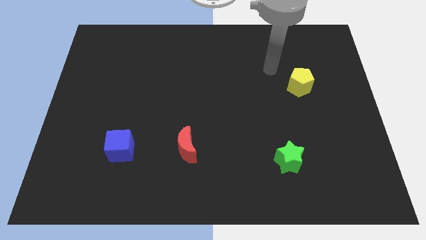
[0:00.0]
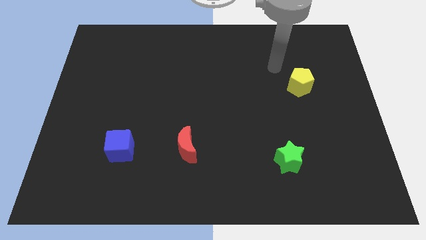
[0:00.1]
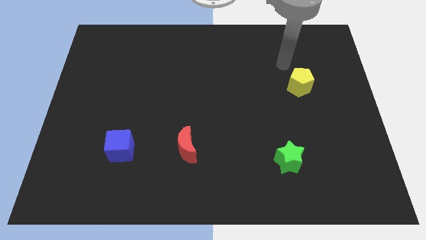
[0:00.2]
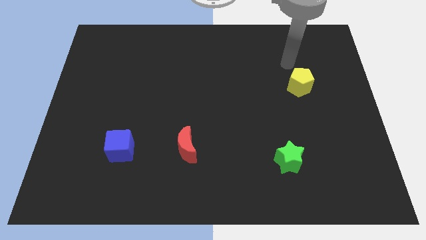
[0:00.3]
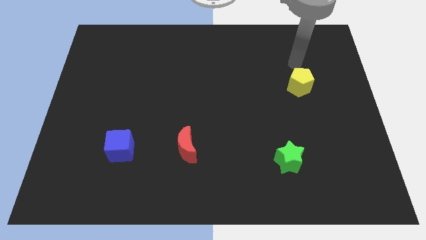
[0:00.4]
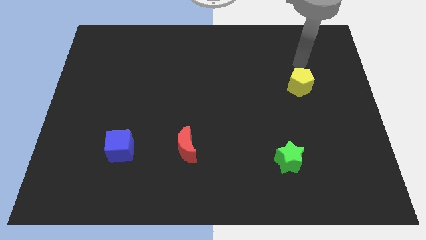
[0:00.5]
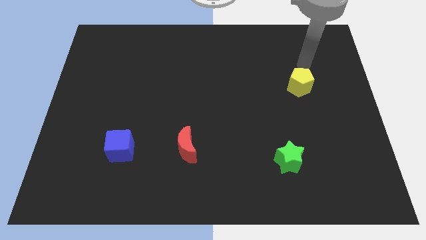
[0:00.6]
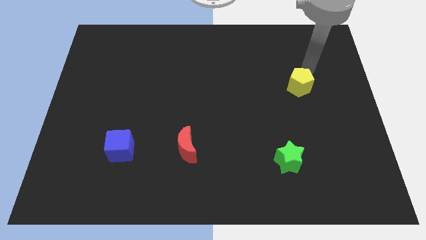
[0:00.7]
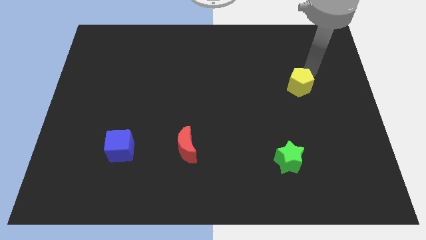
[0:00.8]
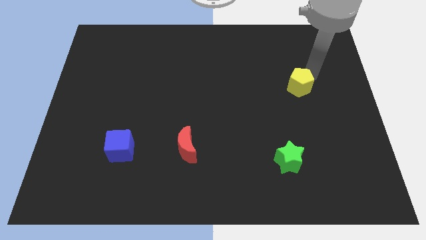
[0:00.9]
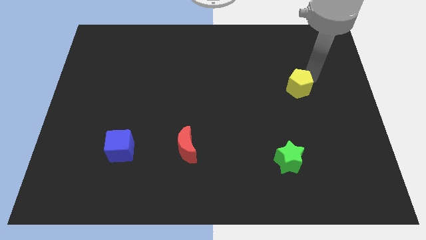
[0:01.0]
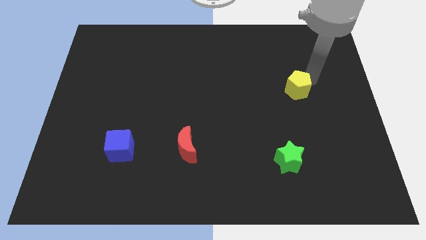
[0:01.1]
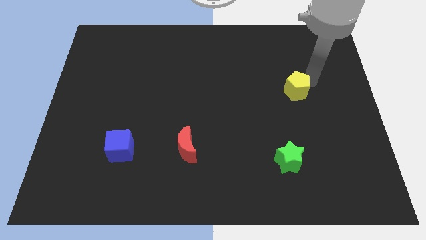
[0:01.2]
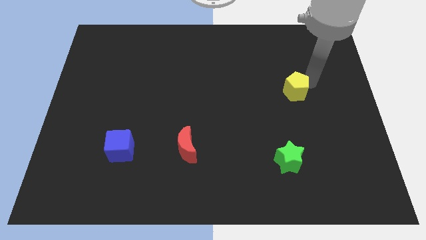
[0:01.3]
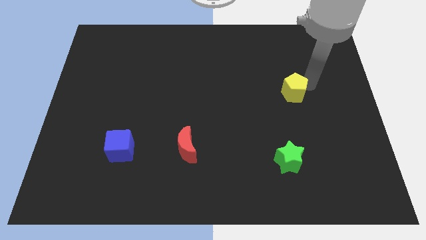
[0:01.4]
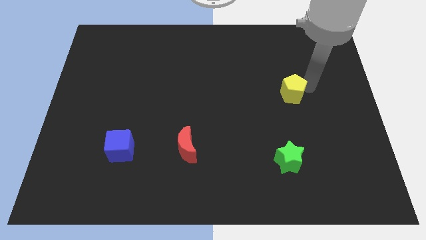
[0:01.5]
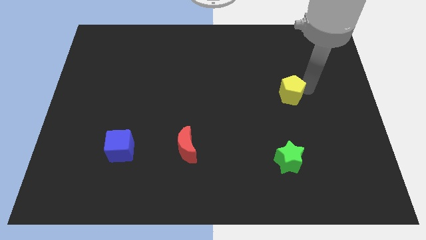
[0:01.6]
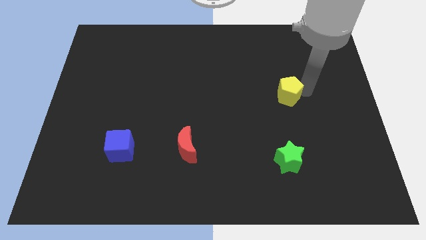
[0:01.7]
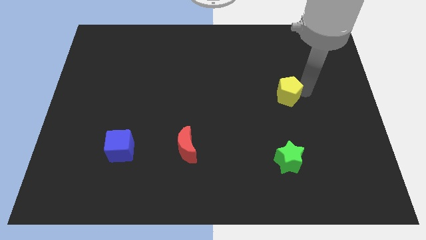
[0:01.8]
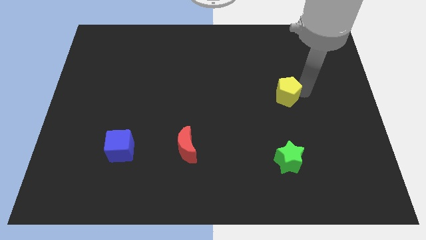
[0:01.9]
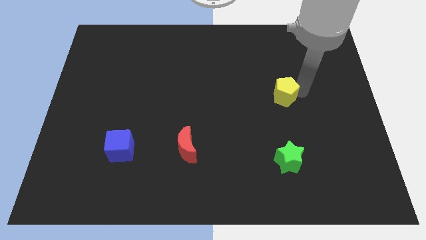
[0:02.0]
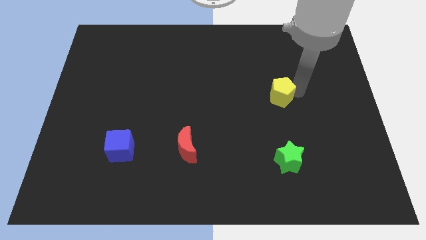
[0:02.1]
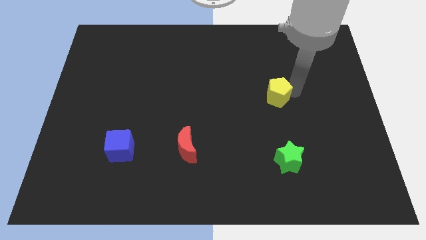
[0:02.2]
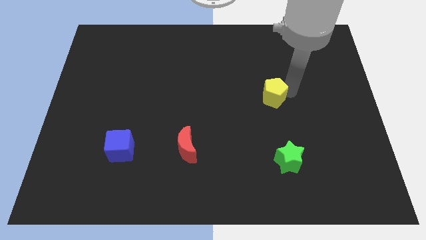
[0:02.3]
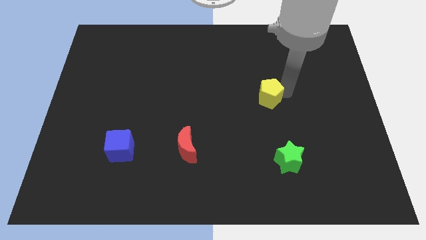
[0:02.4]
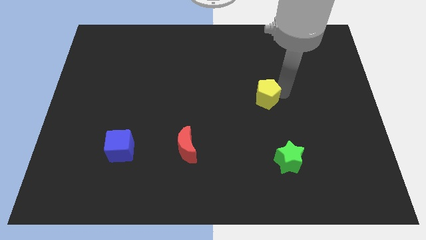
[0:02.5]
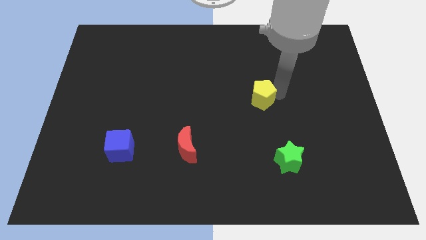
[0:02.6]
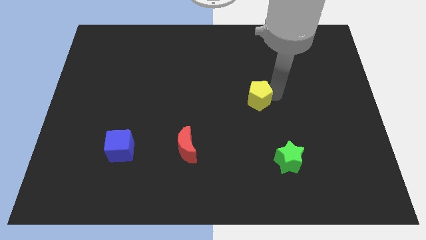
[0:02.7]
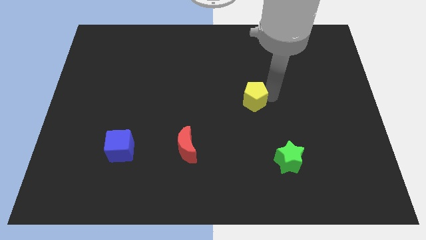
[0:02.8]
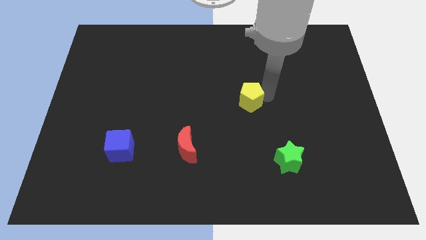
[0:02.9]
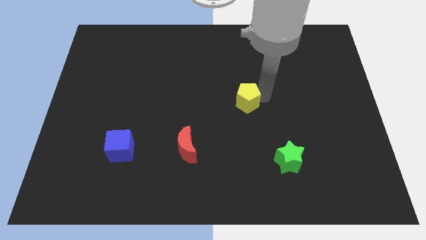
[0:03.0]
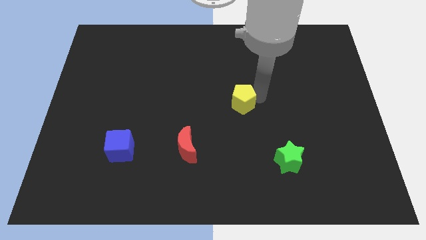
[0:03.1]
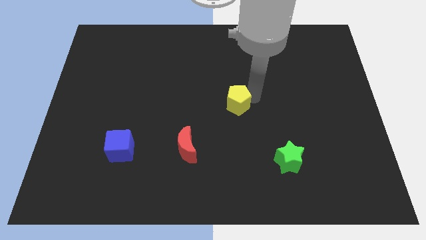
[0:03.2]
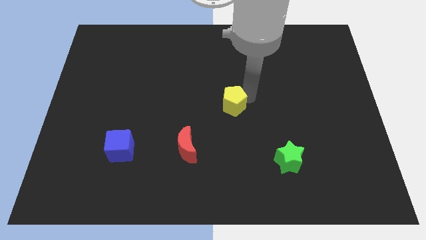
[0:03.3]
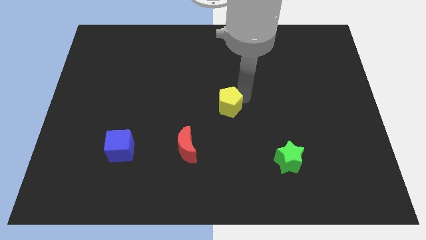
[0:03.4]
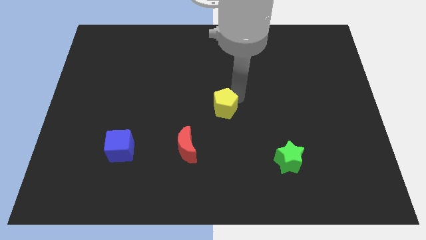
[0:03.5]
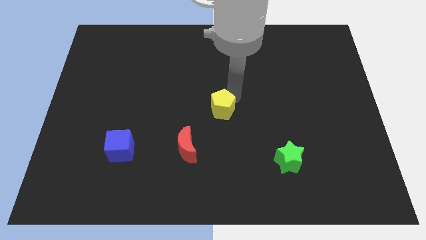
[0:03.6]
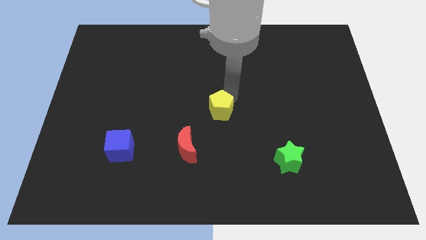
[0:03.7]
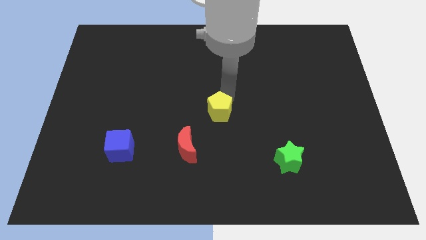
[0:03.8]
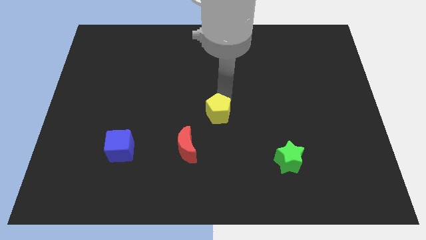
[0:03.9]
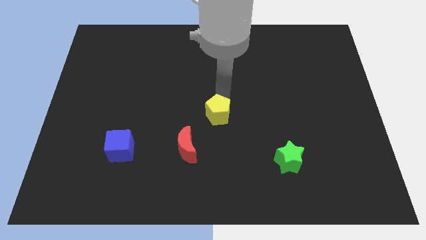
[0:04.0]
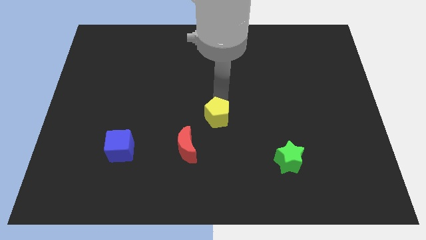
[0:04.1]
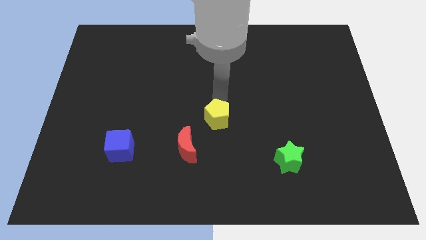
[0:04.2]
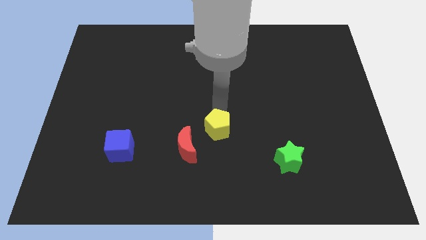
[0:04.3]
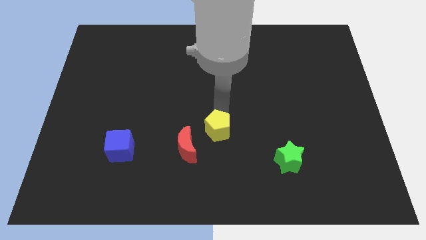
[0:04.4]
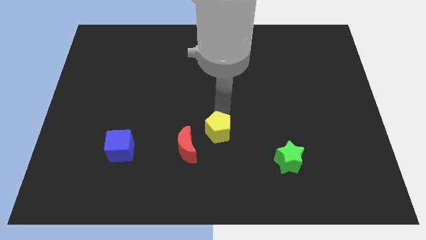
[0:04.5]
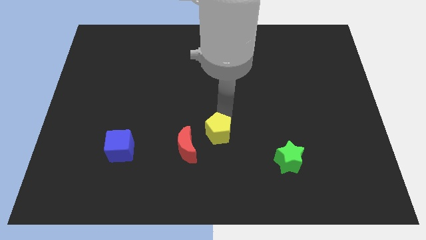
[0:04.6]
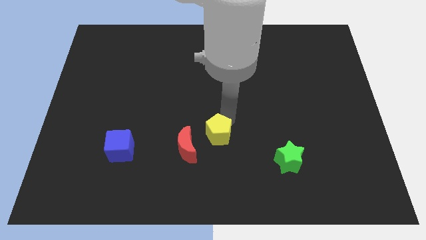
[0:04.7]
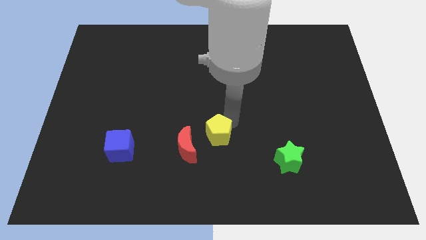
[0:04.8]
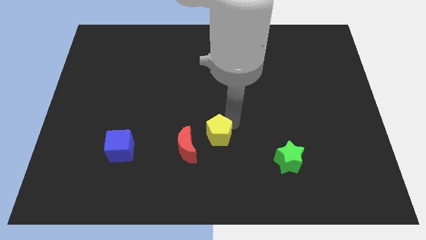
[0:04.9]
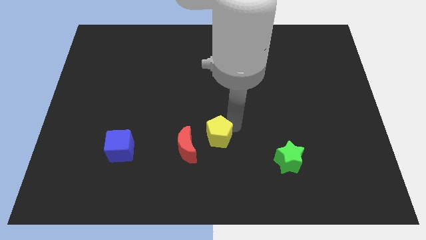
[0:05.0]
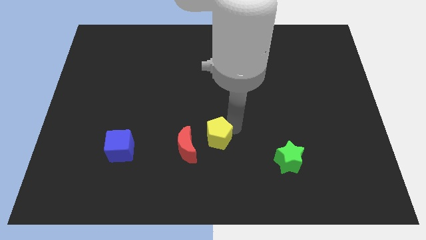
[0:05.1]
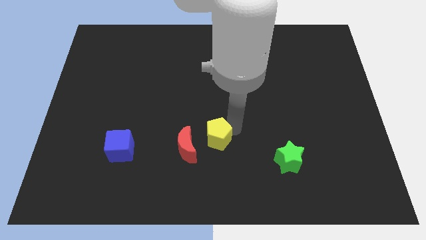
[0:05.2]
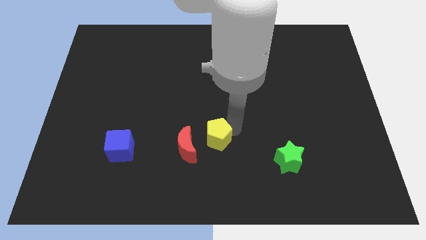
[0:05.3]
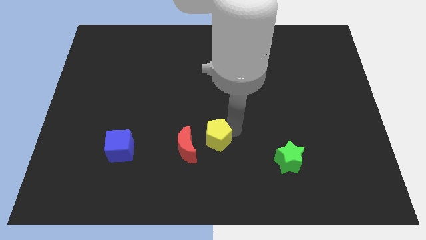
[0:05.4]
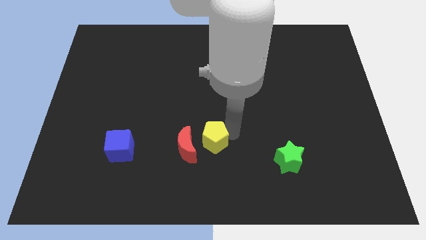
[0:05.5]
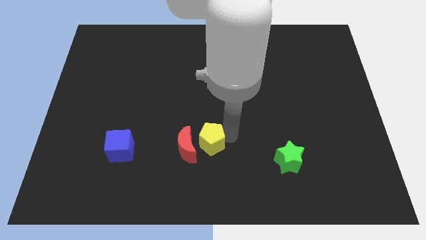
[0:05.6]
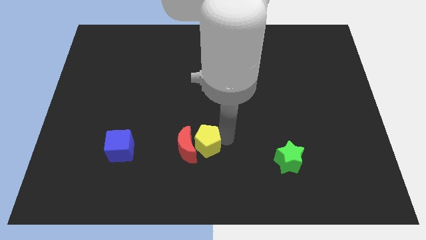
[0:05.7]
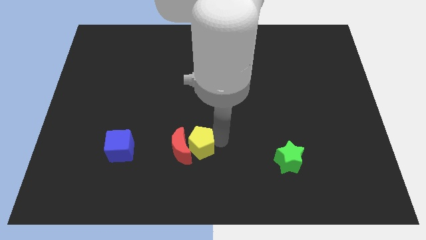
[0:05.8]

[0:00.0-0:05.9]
slide the yellow block close to the red moon

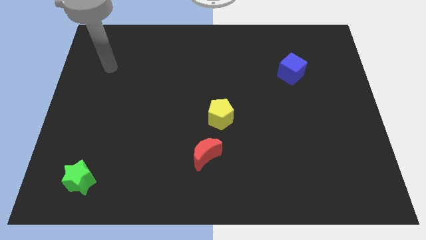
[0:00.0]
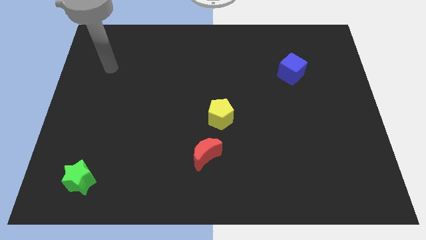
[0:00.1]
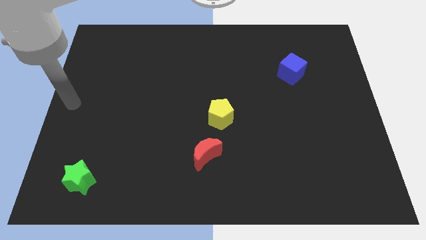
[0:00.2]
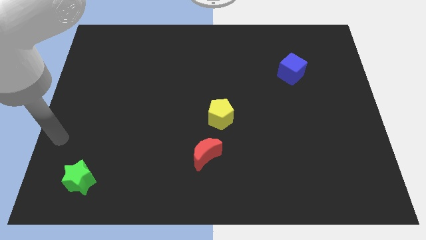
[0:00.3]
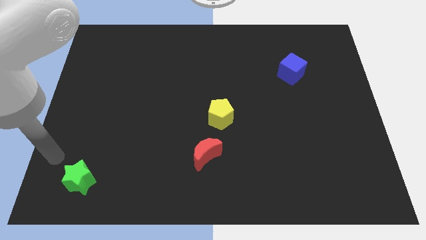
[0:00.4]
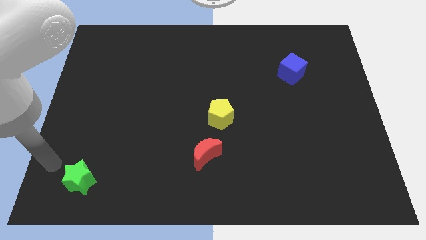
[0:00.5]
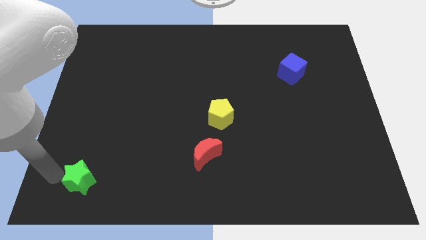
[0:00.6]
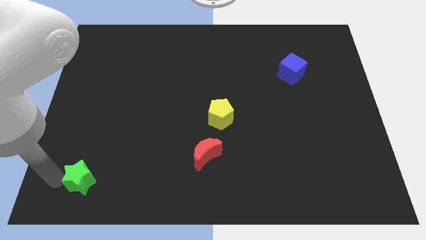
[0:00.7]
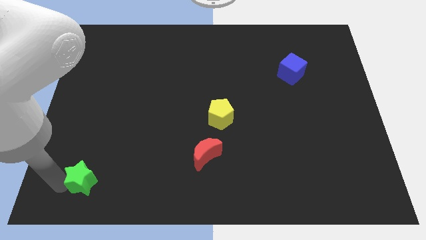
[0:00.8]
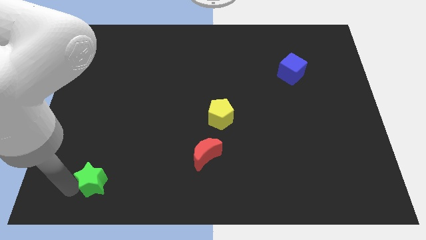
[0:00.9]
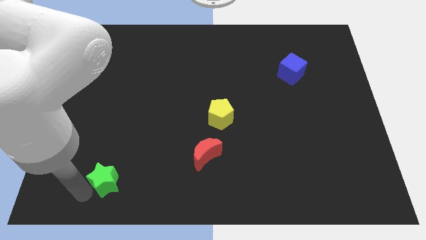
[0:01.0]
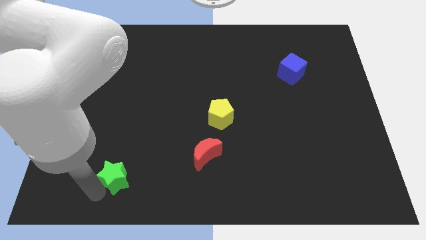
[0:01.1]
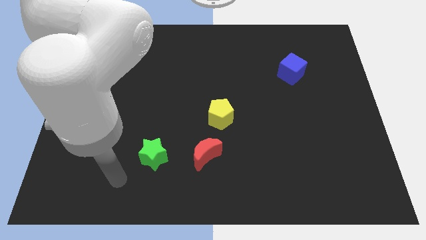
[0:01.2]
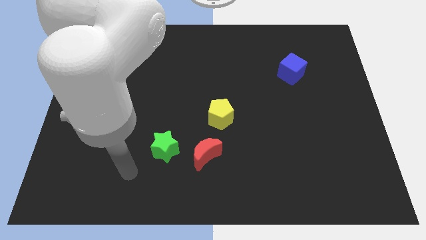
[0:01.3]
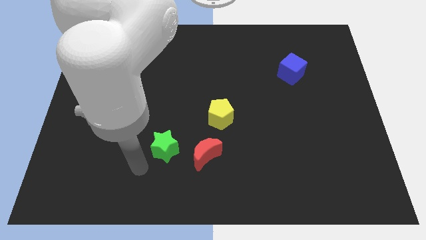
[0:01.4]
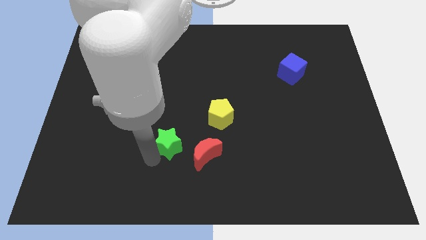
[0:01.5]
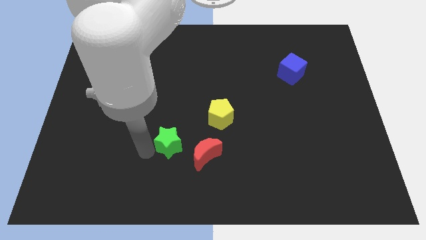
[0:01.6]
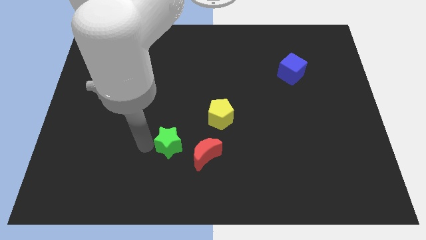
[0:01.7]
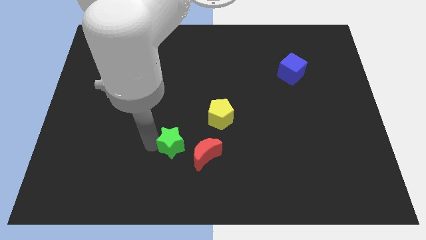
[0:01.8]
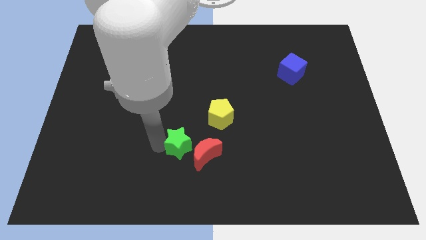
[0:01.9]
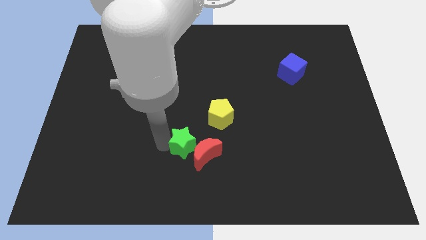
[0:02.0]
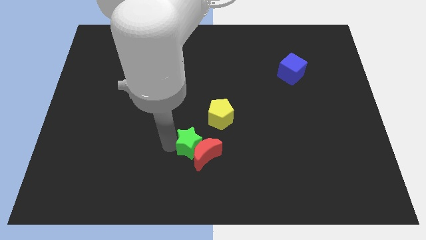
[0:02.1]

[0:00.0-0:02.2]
move the green block to the red moon

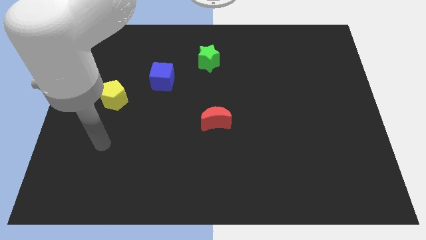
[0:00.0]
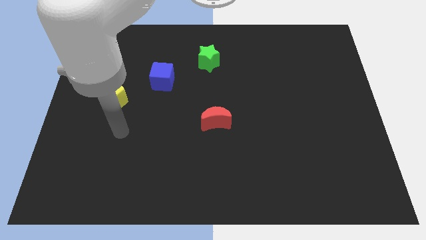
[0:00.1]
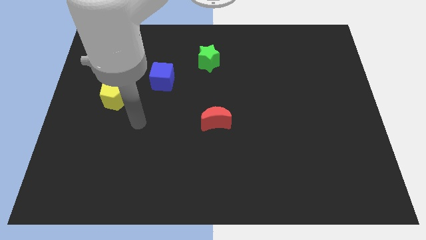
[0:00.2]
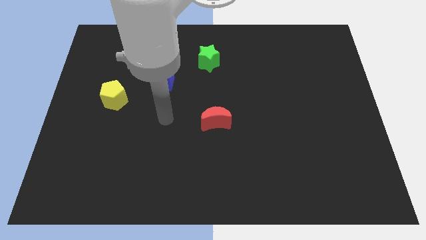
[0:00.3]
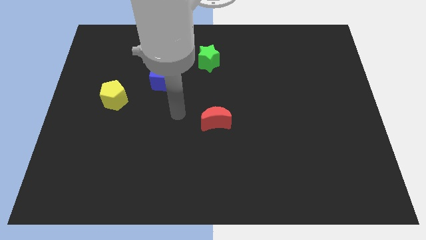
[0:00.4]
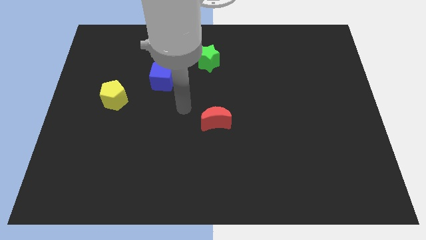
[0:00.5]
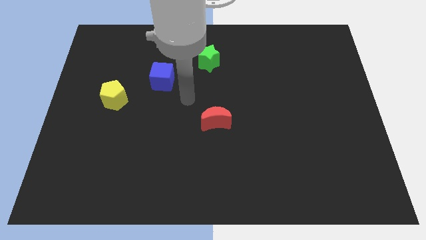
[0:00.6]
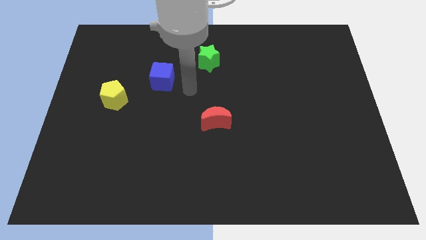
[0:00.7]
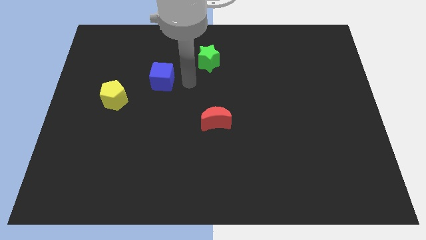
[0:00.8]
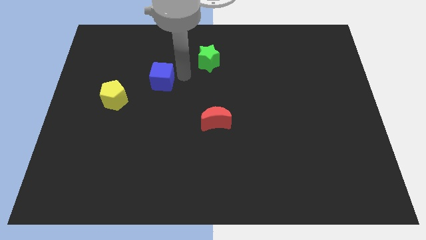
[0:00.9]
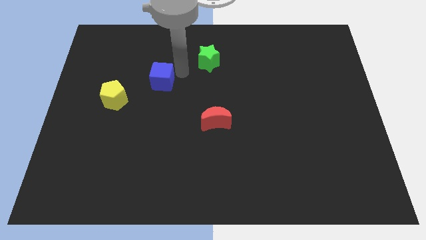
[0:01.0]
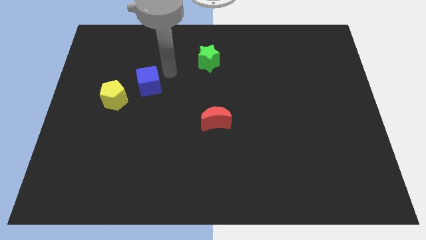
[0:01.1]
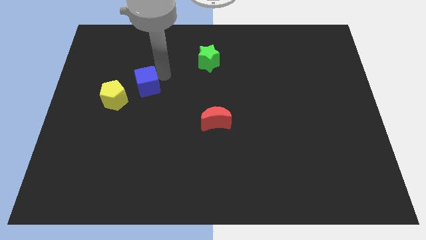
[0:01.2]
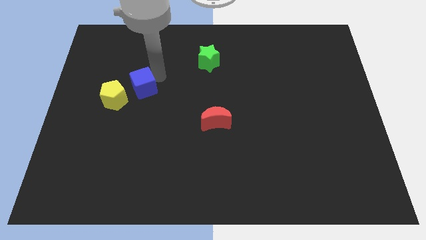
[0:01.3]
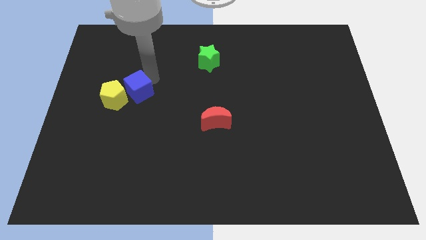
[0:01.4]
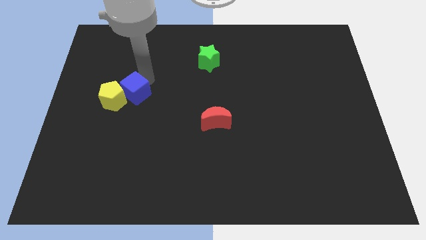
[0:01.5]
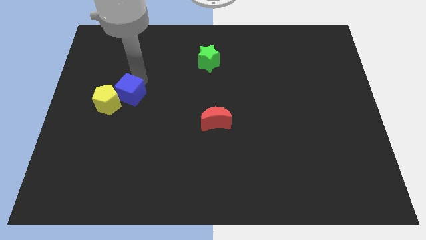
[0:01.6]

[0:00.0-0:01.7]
put the blue cube close to the pentagon
